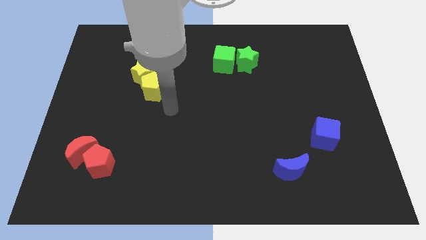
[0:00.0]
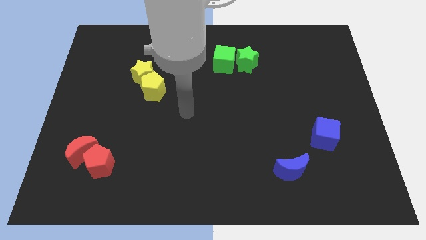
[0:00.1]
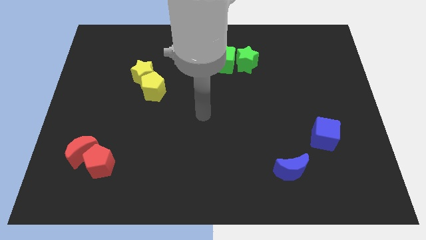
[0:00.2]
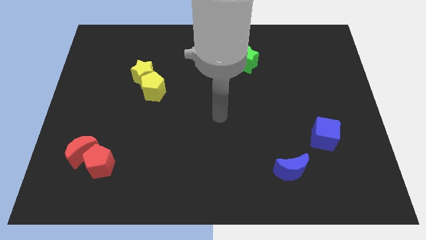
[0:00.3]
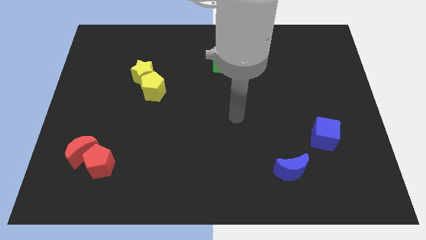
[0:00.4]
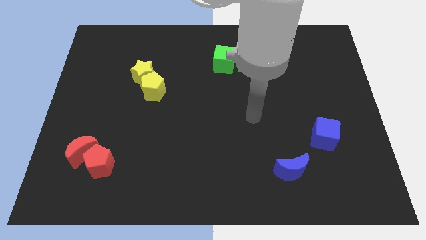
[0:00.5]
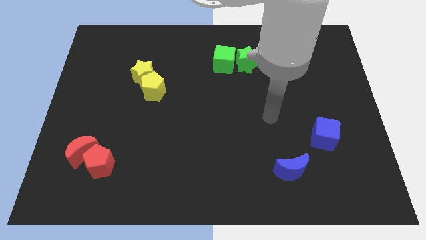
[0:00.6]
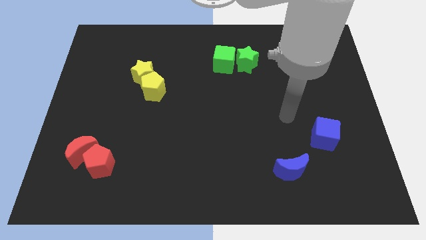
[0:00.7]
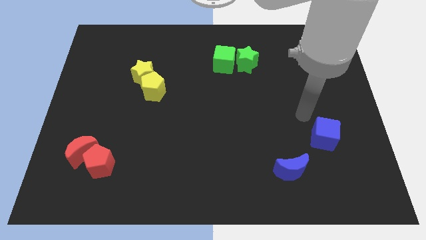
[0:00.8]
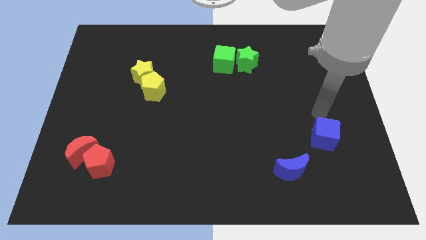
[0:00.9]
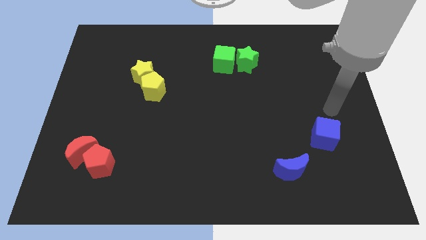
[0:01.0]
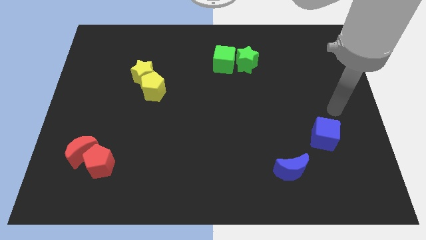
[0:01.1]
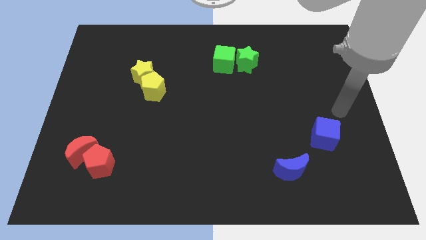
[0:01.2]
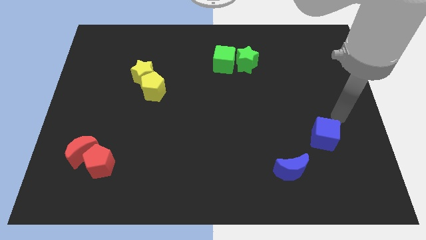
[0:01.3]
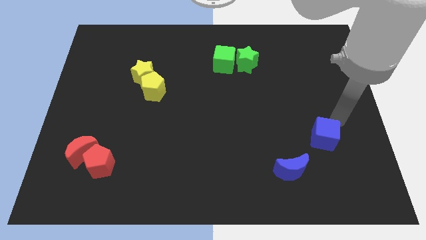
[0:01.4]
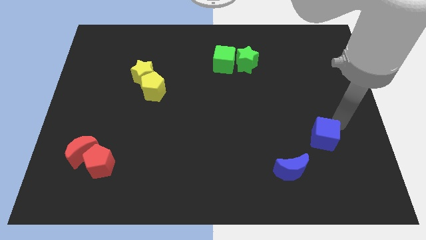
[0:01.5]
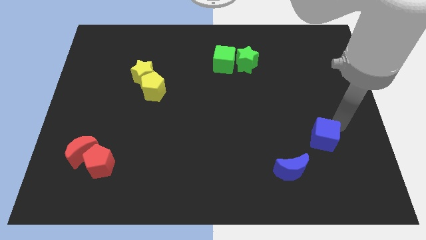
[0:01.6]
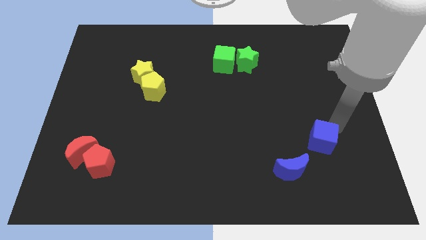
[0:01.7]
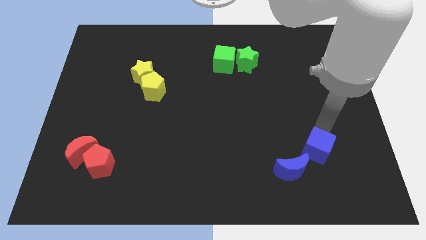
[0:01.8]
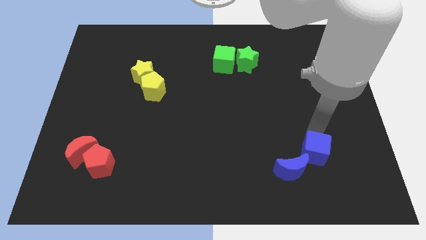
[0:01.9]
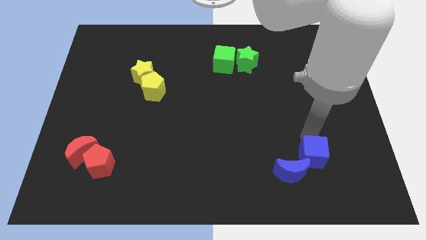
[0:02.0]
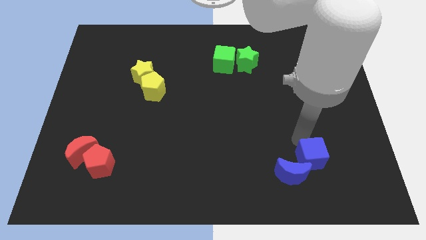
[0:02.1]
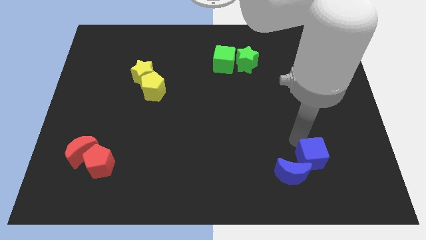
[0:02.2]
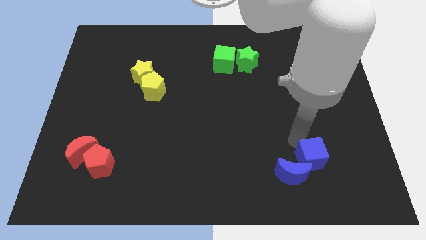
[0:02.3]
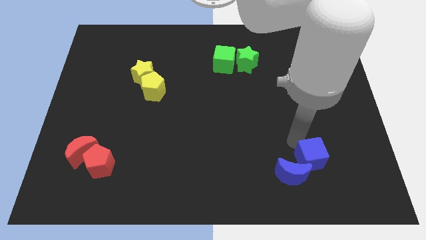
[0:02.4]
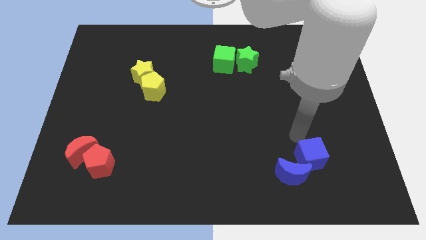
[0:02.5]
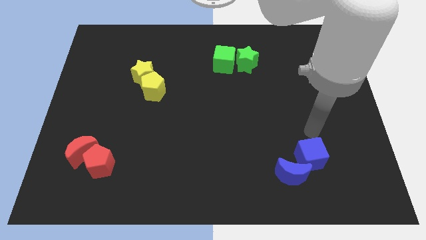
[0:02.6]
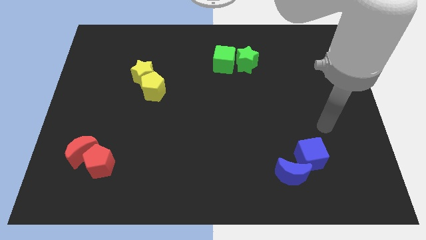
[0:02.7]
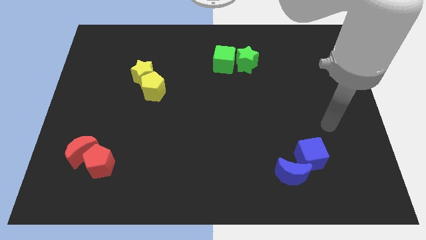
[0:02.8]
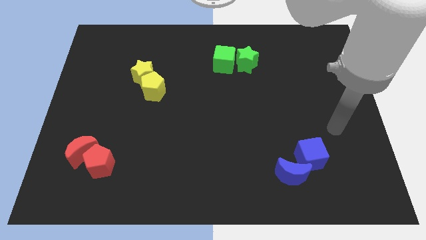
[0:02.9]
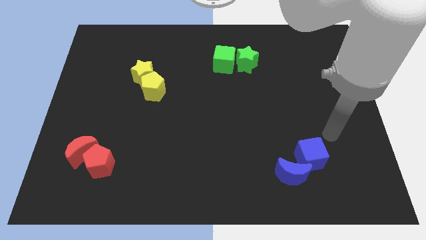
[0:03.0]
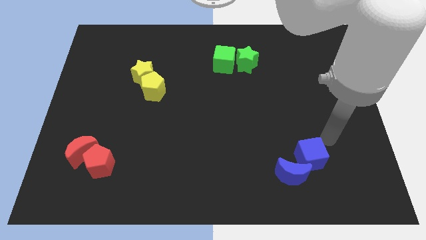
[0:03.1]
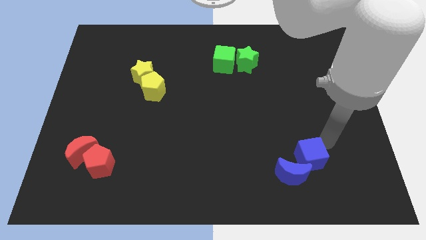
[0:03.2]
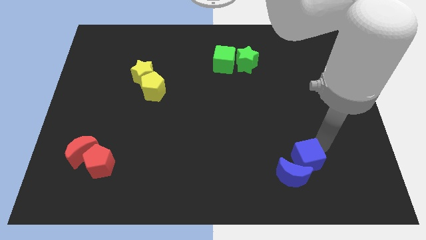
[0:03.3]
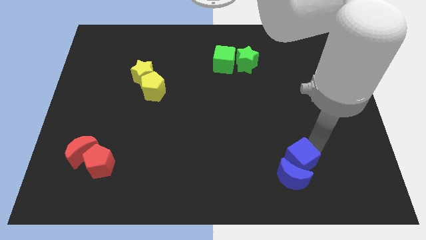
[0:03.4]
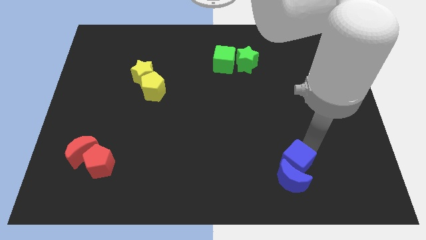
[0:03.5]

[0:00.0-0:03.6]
move the blue cube above the blue moon

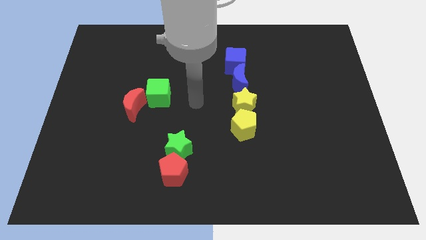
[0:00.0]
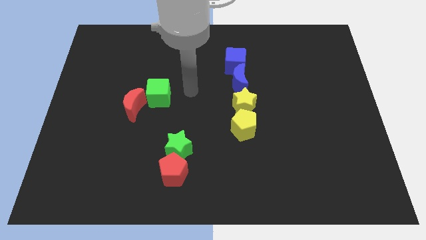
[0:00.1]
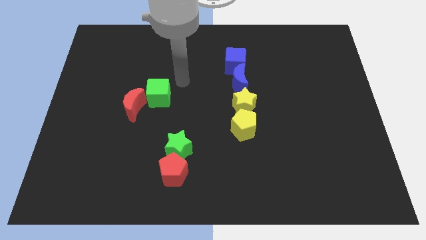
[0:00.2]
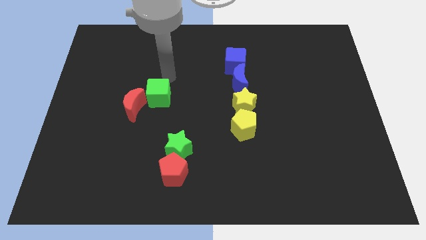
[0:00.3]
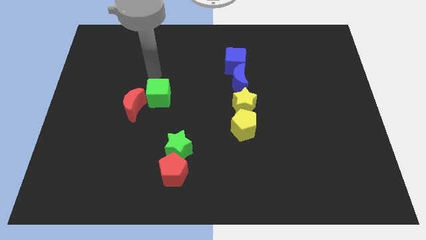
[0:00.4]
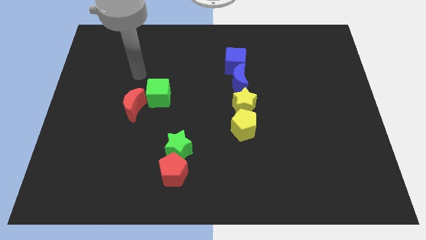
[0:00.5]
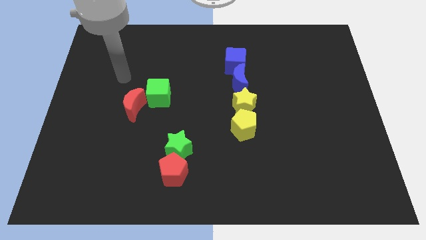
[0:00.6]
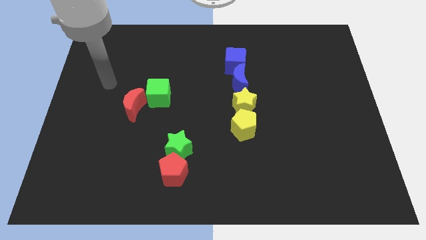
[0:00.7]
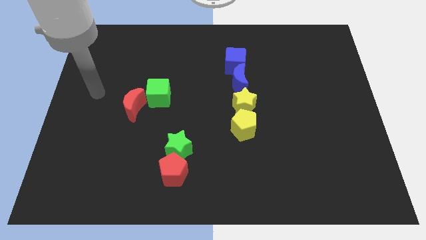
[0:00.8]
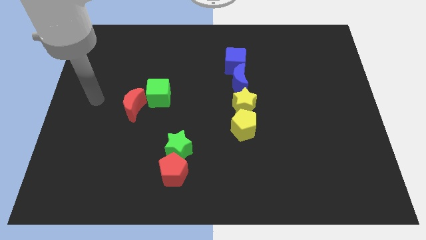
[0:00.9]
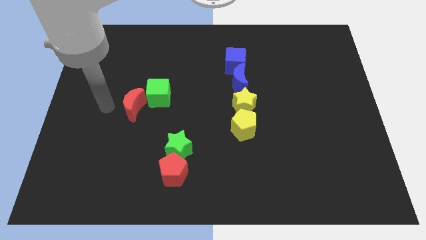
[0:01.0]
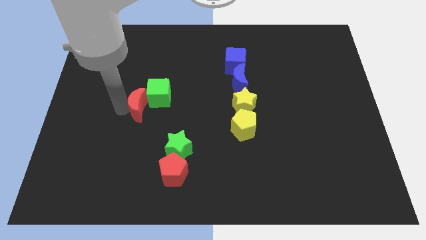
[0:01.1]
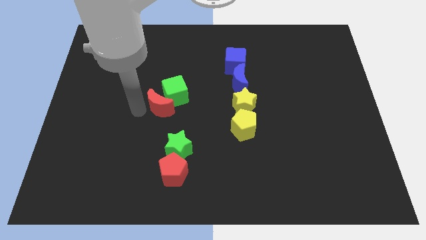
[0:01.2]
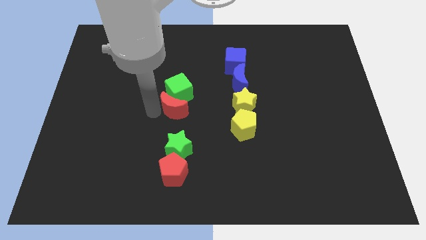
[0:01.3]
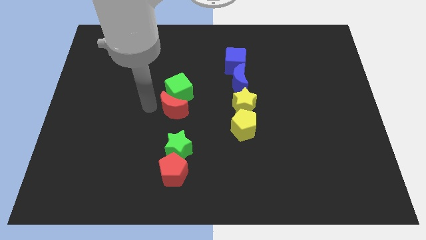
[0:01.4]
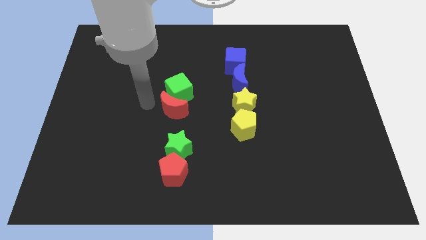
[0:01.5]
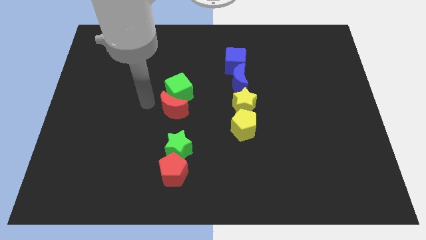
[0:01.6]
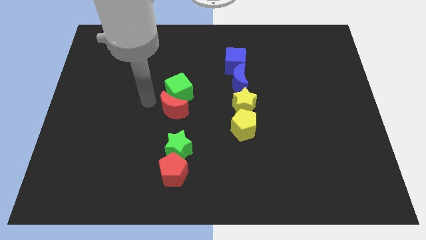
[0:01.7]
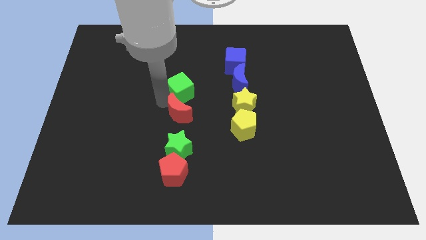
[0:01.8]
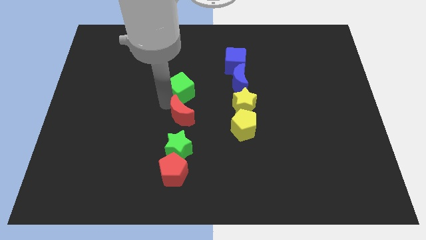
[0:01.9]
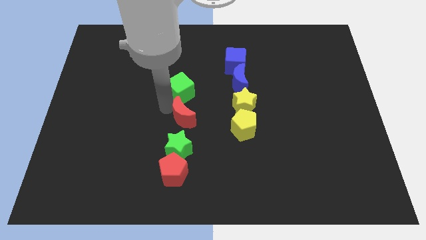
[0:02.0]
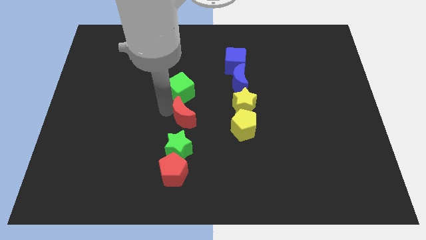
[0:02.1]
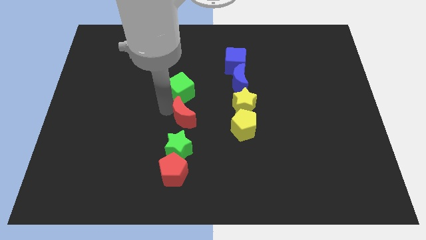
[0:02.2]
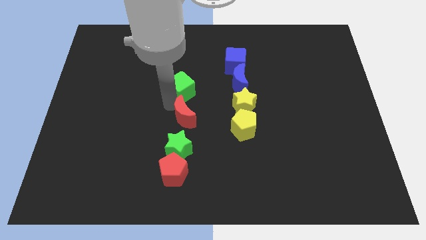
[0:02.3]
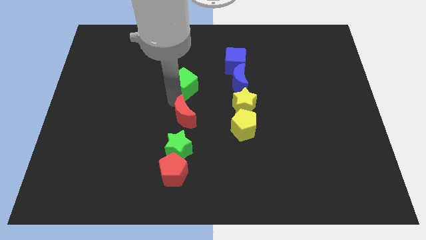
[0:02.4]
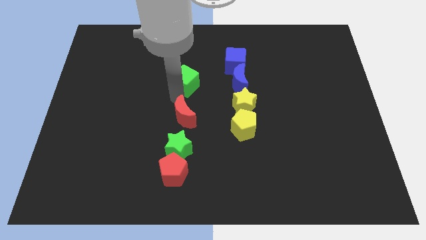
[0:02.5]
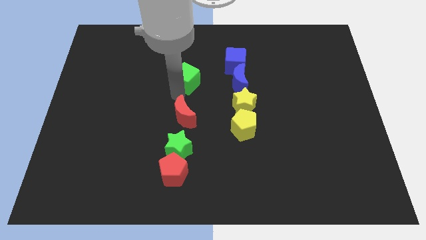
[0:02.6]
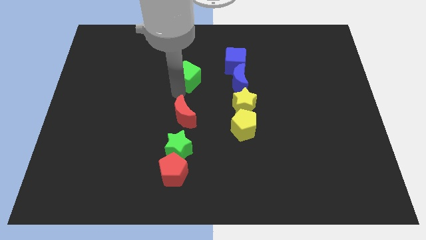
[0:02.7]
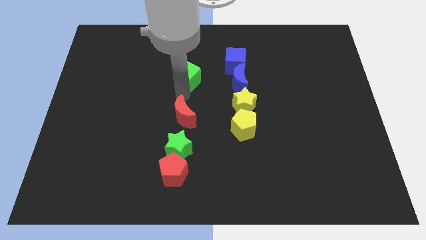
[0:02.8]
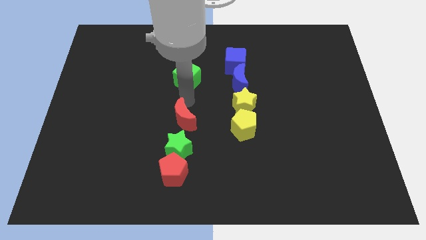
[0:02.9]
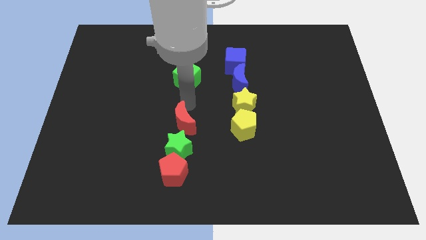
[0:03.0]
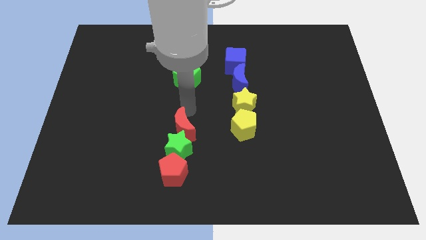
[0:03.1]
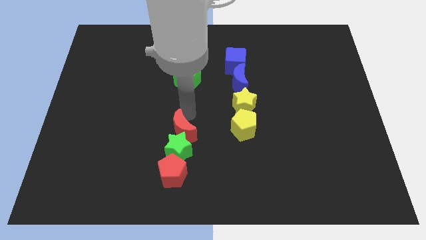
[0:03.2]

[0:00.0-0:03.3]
separate both the green cube and red crescent from each other

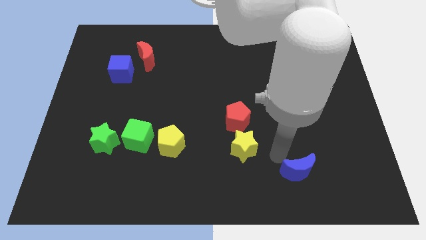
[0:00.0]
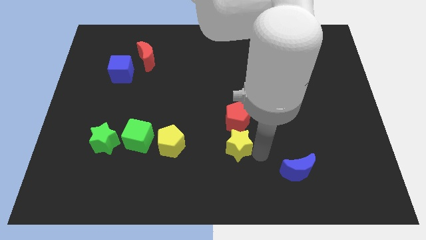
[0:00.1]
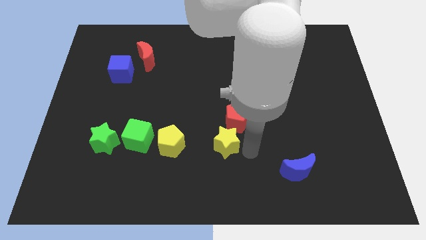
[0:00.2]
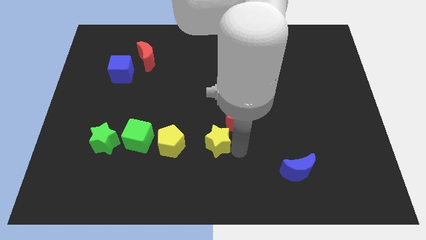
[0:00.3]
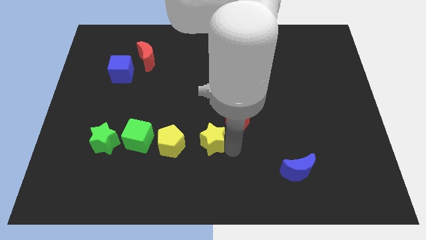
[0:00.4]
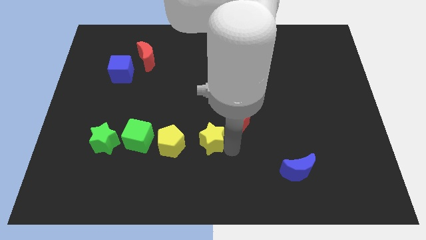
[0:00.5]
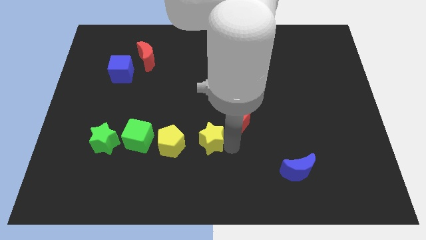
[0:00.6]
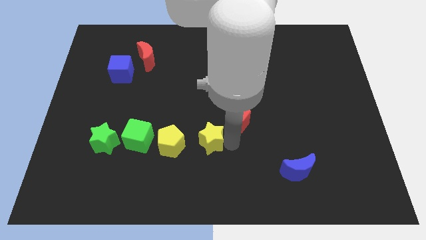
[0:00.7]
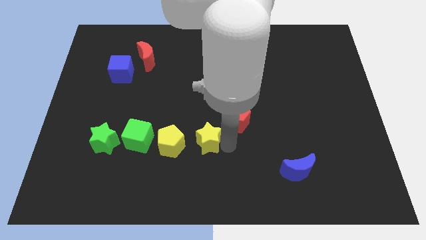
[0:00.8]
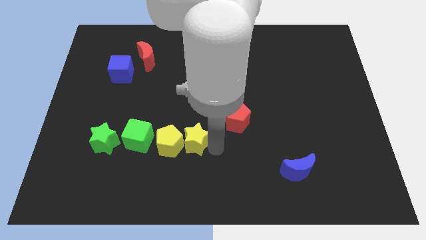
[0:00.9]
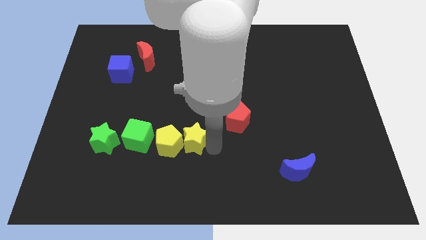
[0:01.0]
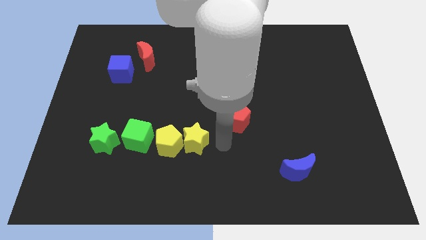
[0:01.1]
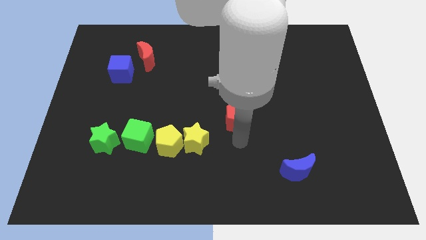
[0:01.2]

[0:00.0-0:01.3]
slide the yellow star to the right side of the yellow pentagon

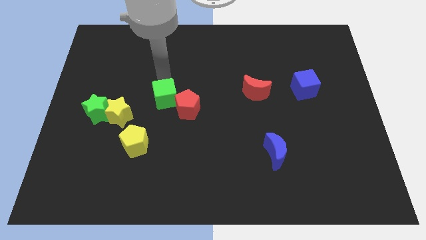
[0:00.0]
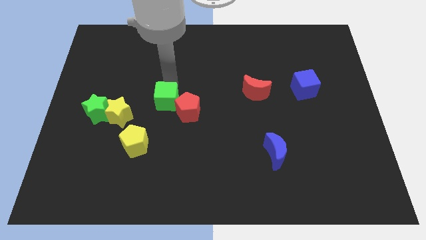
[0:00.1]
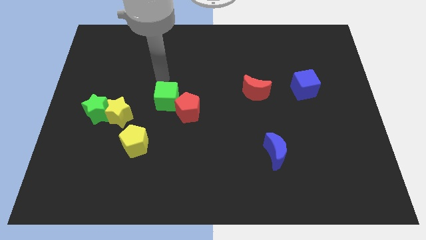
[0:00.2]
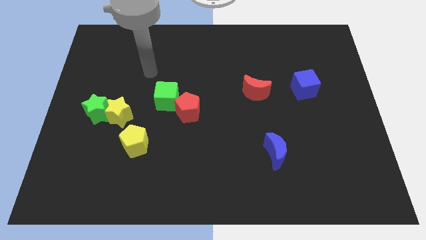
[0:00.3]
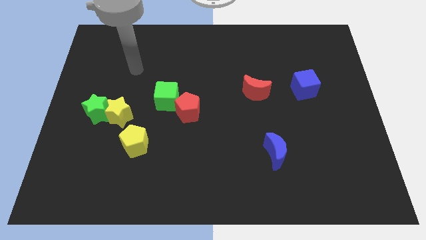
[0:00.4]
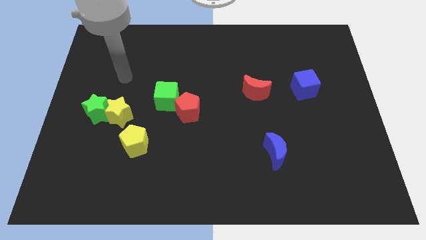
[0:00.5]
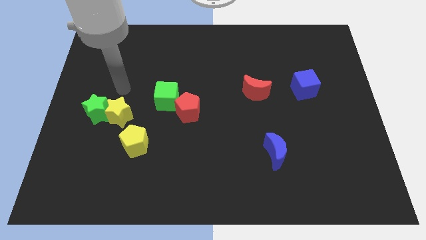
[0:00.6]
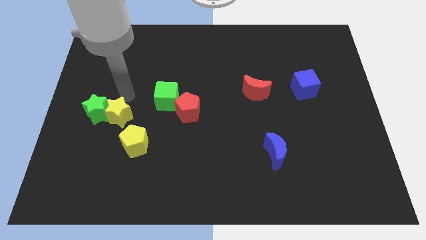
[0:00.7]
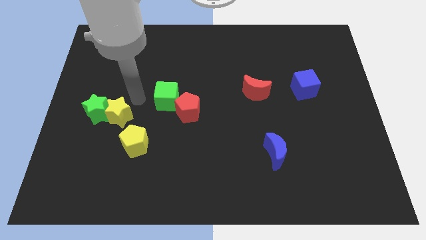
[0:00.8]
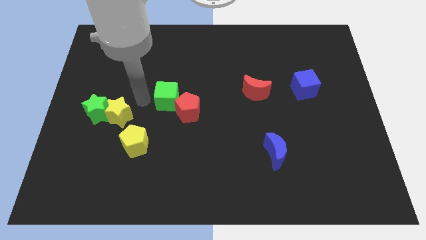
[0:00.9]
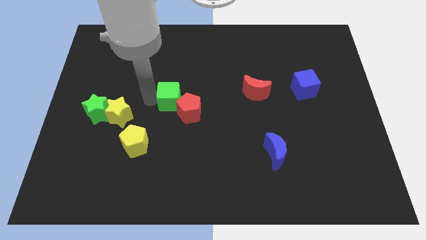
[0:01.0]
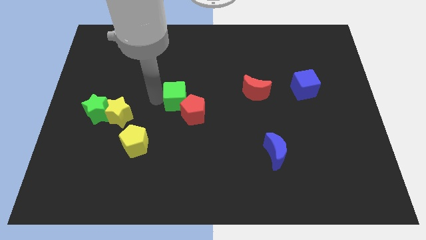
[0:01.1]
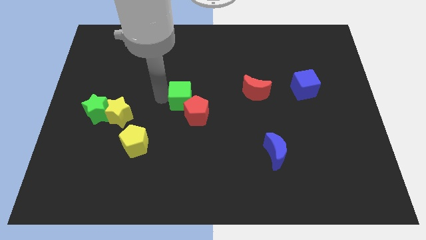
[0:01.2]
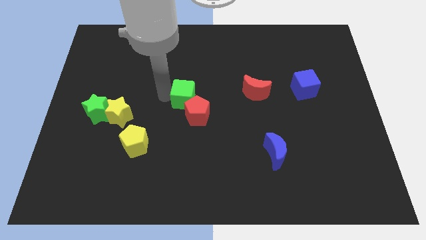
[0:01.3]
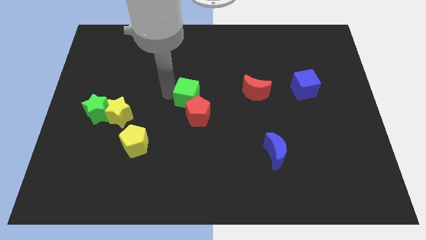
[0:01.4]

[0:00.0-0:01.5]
move the green cube into the red pentagon
